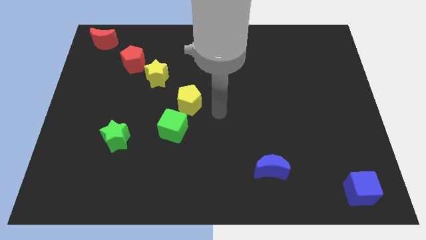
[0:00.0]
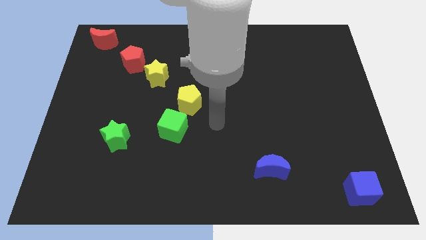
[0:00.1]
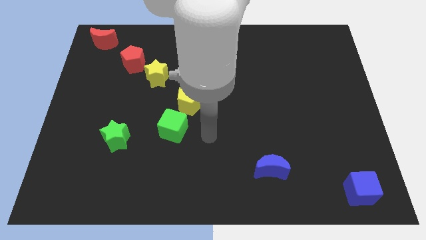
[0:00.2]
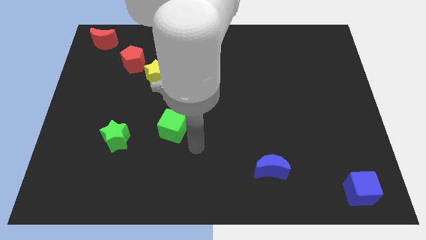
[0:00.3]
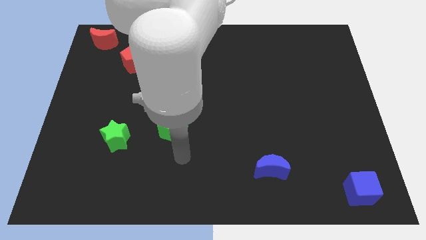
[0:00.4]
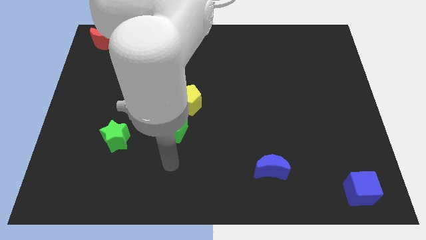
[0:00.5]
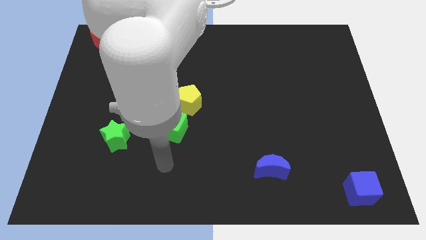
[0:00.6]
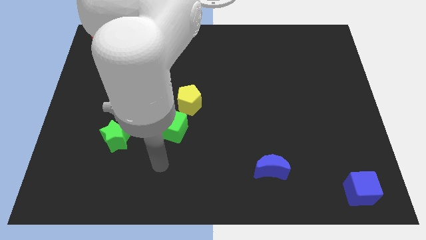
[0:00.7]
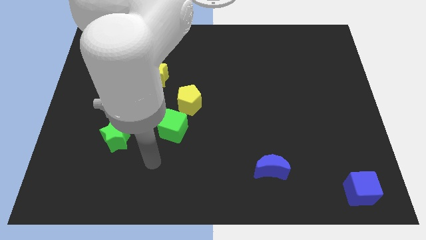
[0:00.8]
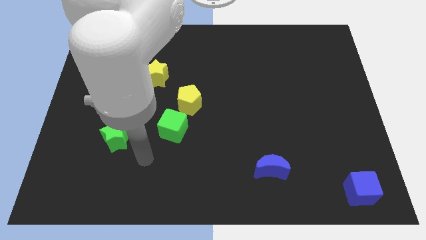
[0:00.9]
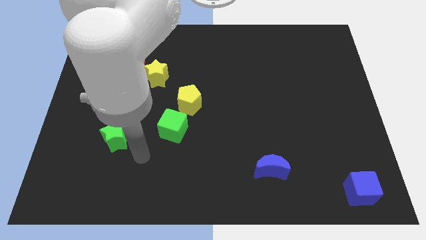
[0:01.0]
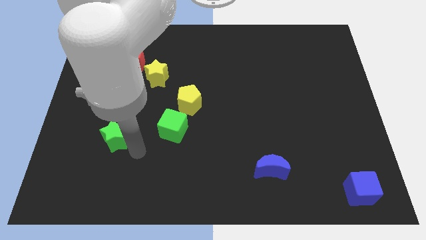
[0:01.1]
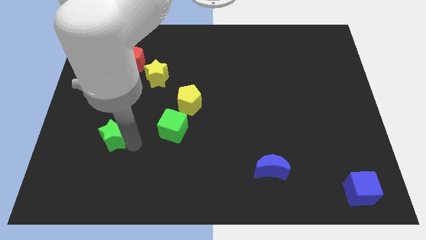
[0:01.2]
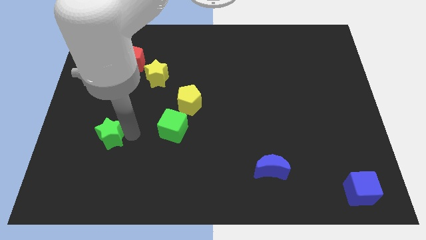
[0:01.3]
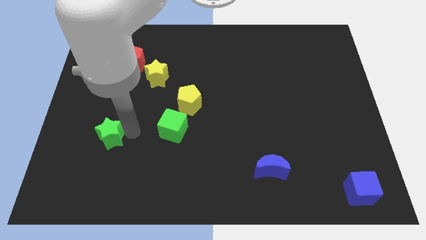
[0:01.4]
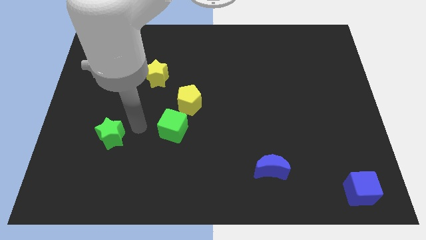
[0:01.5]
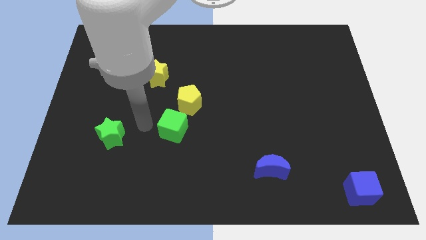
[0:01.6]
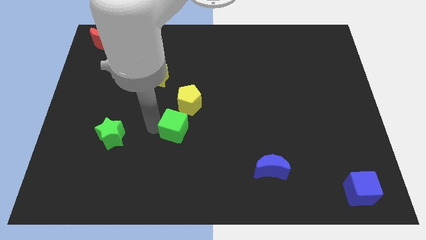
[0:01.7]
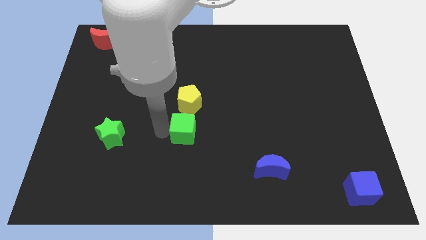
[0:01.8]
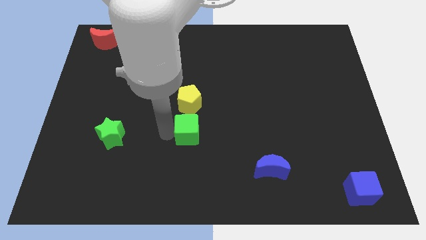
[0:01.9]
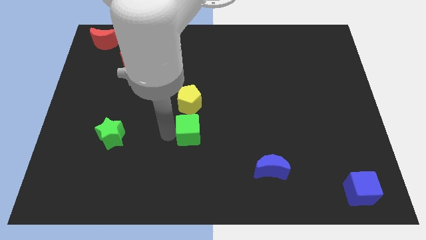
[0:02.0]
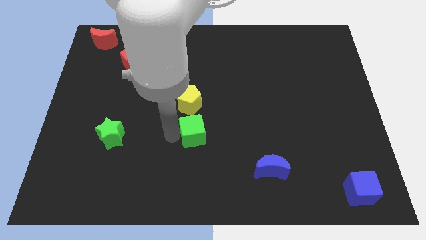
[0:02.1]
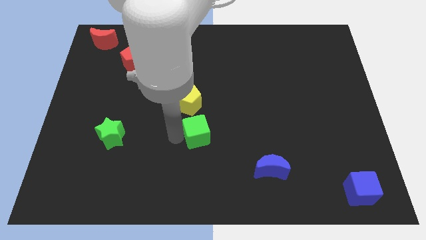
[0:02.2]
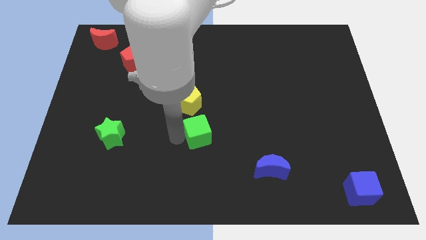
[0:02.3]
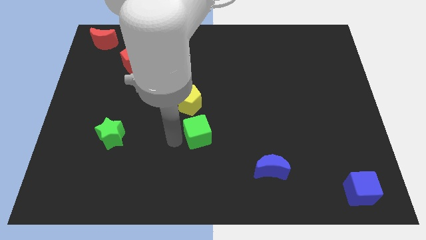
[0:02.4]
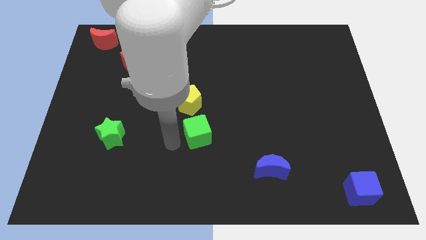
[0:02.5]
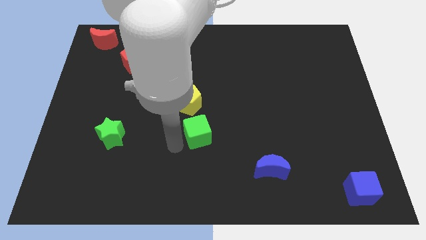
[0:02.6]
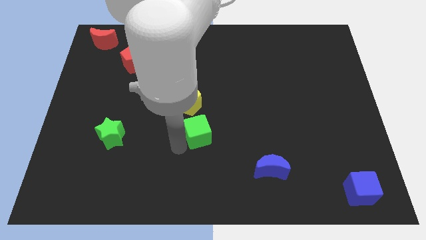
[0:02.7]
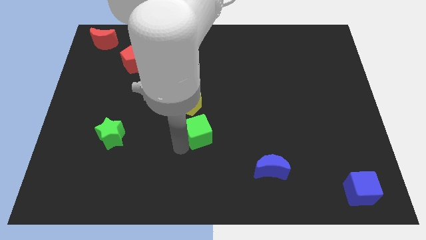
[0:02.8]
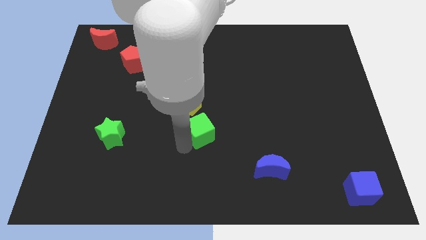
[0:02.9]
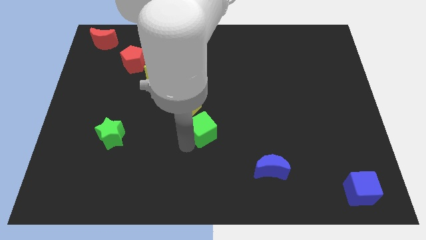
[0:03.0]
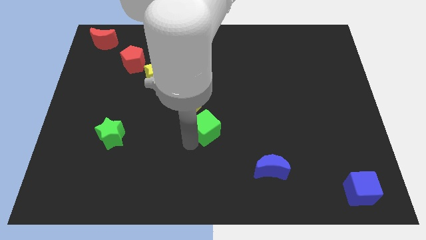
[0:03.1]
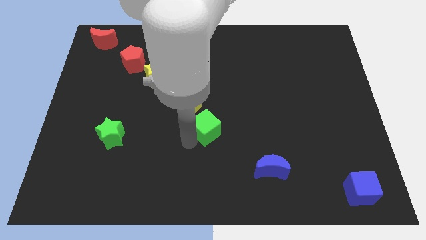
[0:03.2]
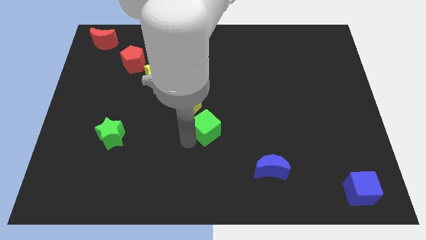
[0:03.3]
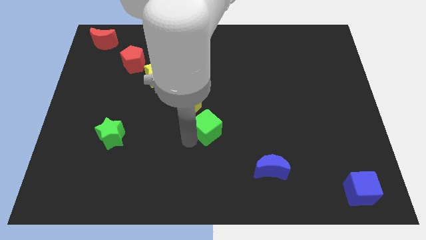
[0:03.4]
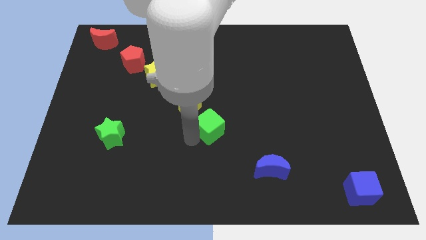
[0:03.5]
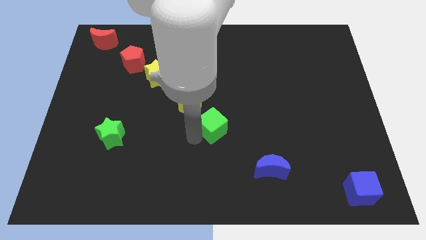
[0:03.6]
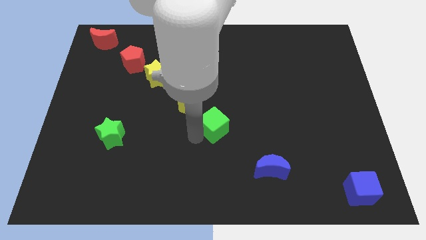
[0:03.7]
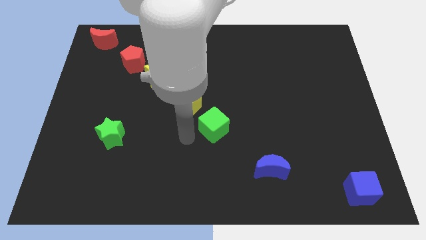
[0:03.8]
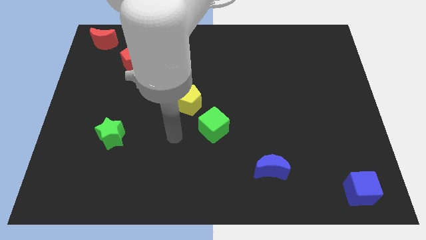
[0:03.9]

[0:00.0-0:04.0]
push the green cube to the bottom right of the yellow pentagon

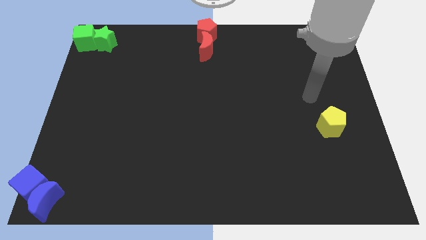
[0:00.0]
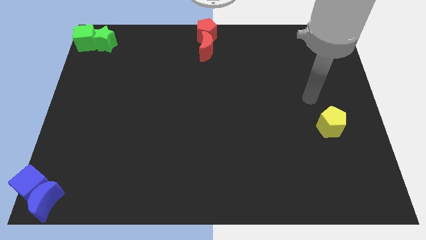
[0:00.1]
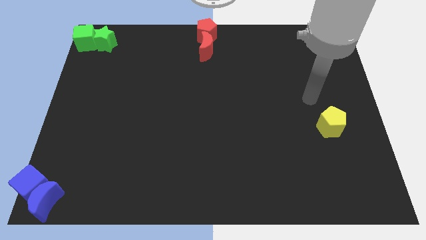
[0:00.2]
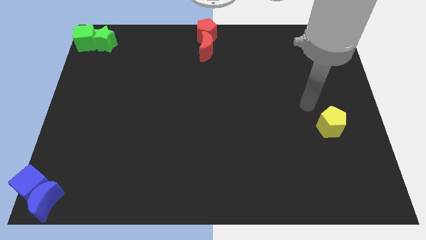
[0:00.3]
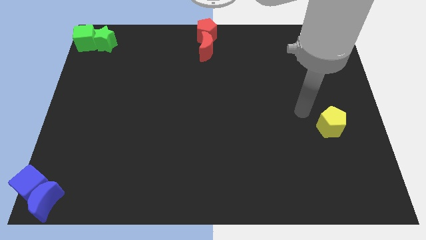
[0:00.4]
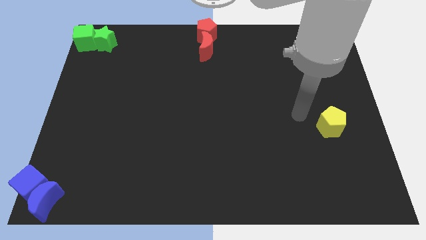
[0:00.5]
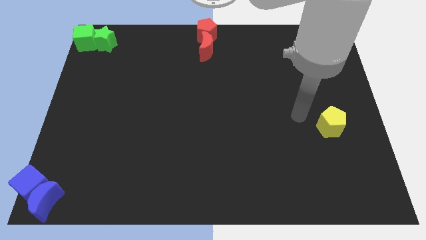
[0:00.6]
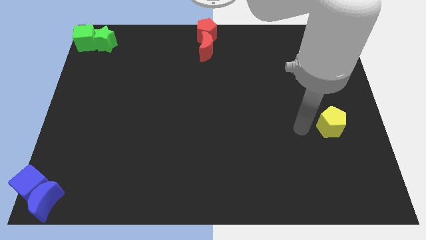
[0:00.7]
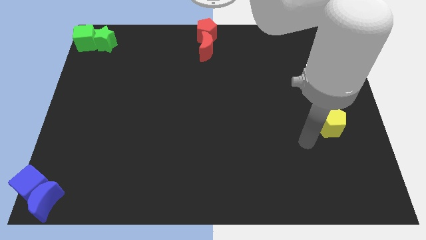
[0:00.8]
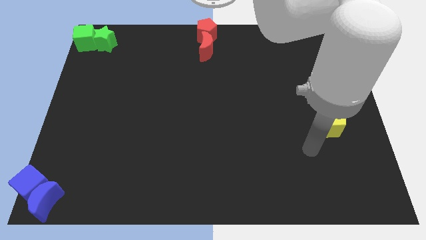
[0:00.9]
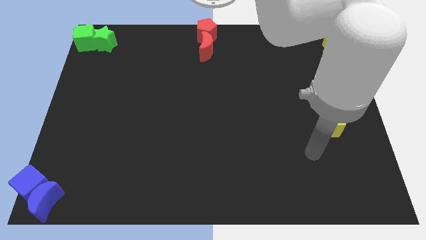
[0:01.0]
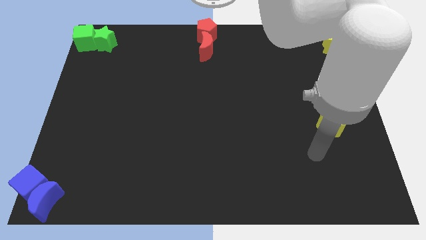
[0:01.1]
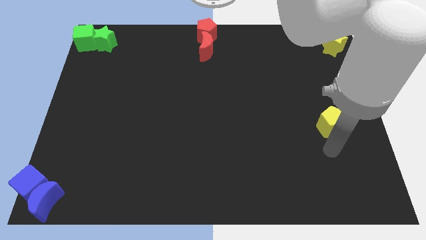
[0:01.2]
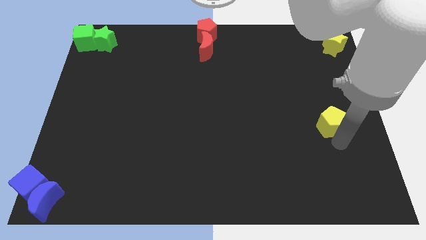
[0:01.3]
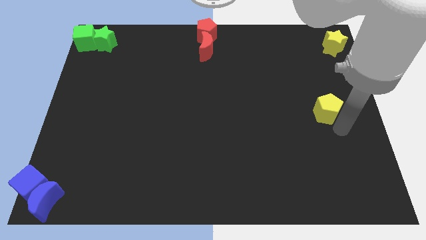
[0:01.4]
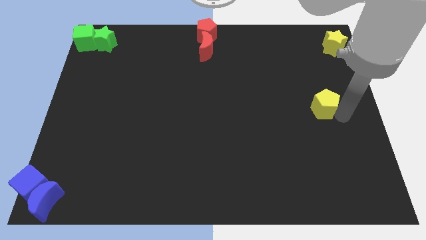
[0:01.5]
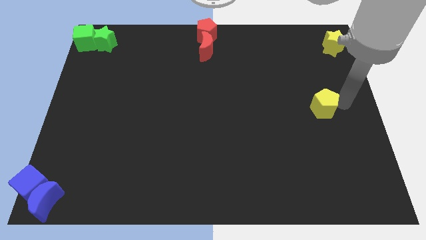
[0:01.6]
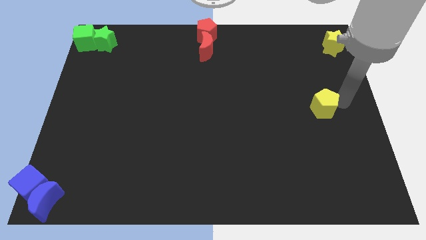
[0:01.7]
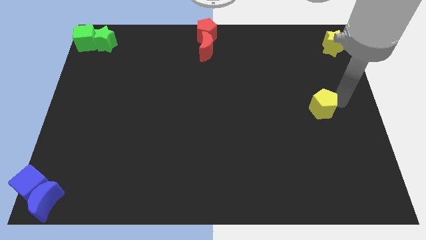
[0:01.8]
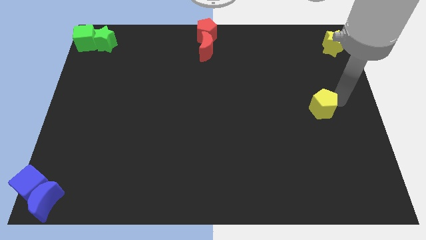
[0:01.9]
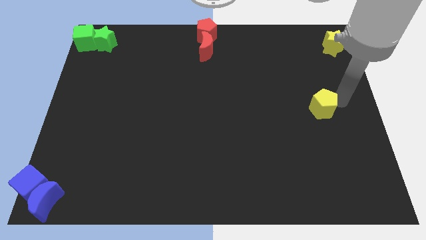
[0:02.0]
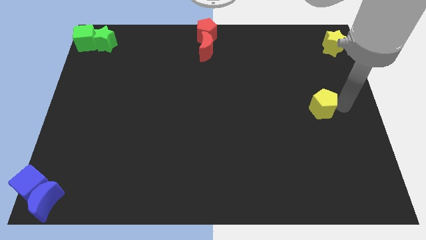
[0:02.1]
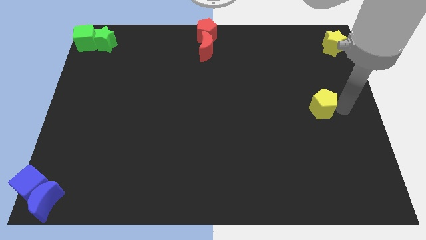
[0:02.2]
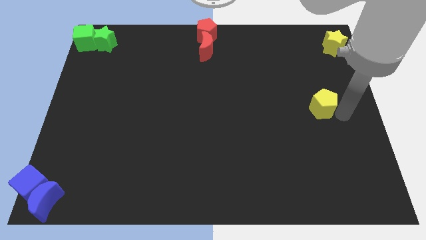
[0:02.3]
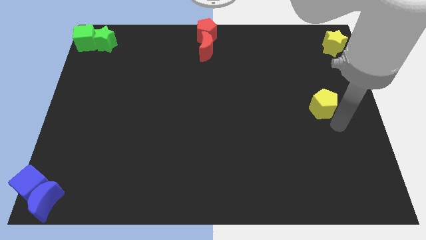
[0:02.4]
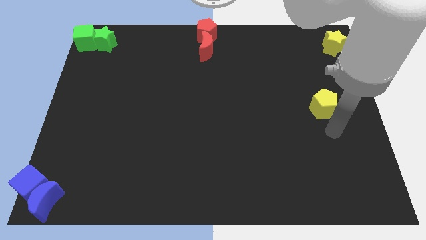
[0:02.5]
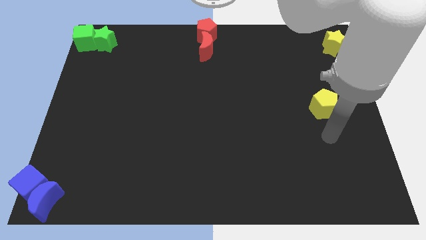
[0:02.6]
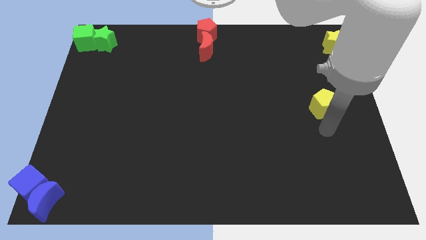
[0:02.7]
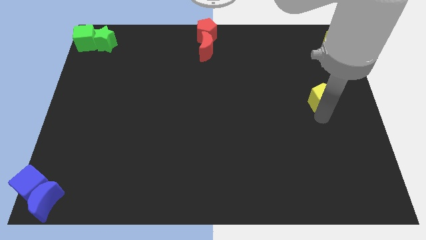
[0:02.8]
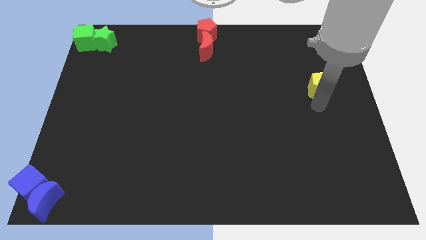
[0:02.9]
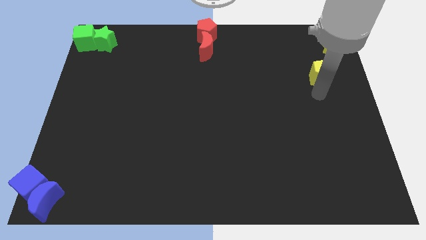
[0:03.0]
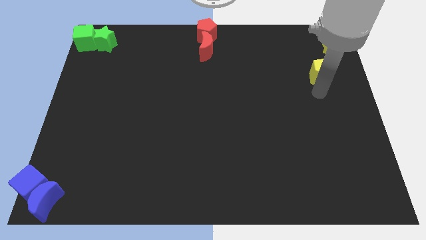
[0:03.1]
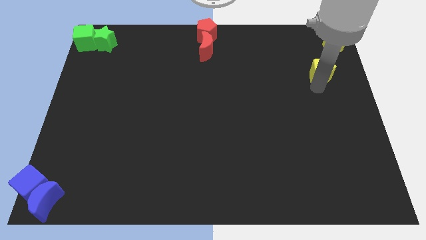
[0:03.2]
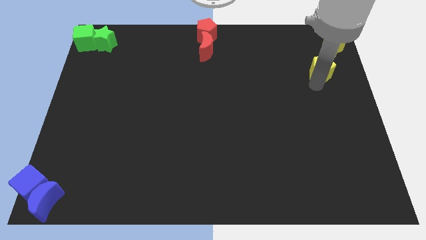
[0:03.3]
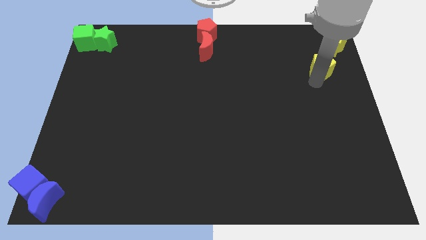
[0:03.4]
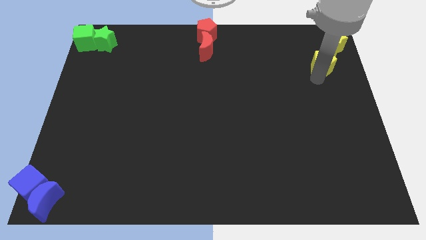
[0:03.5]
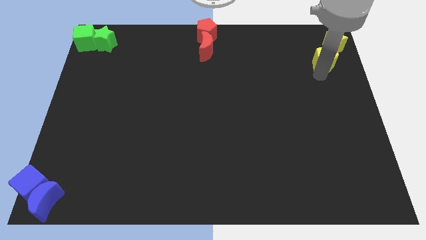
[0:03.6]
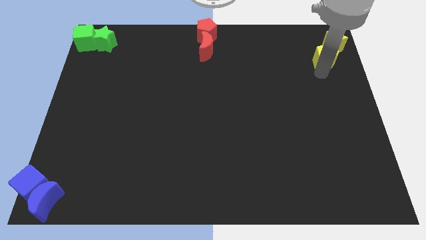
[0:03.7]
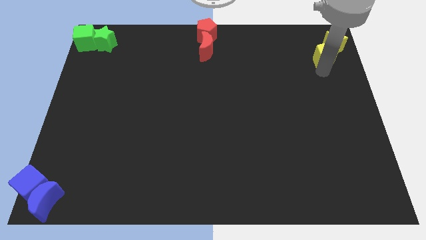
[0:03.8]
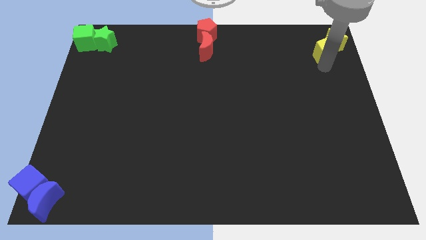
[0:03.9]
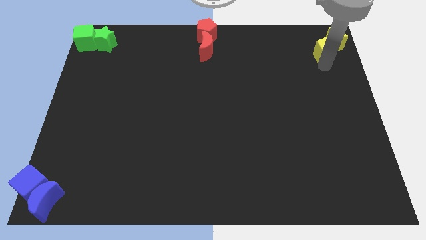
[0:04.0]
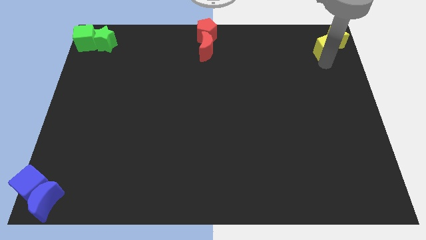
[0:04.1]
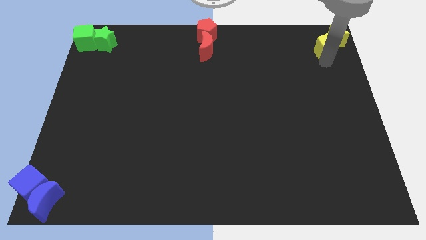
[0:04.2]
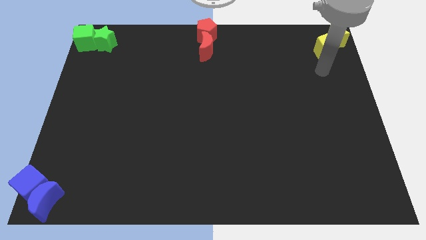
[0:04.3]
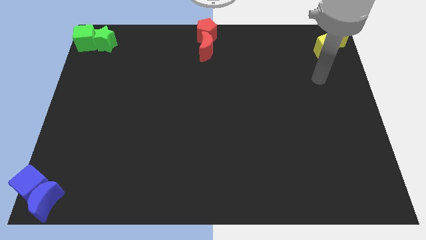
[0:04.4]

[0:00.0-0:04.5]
push the yellow pentagon into the yellow star

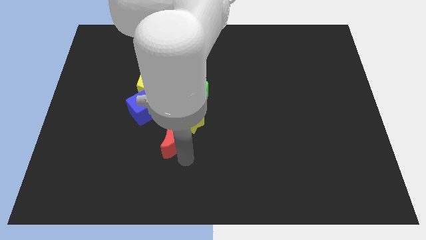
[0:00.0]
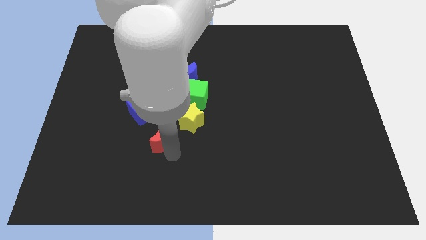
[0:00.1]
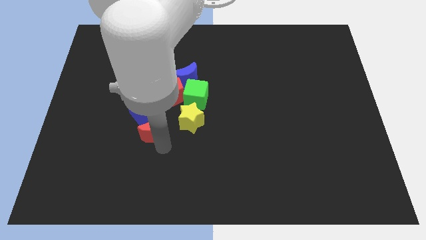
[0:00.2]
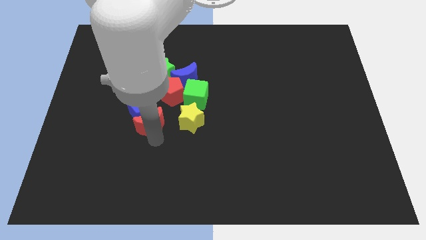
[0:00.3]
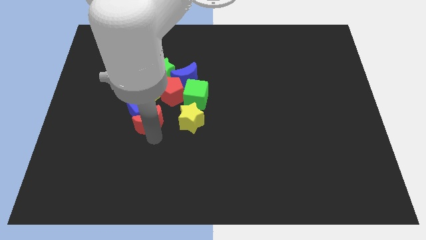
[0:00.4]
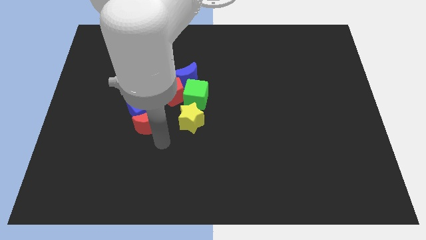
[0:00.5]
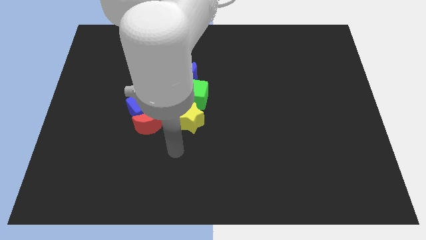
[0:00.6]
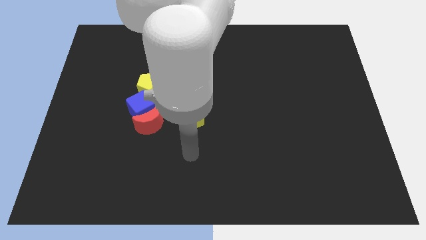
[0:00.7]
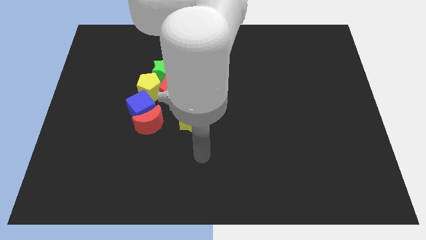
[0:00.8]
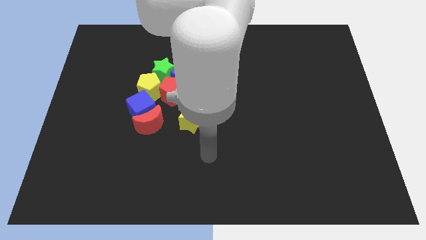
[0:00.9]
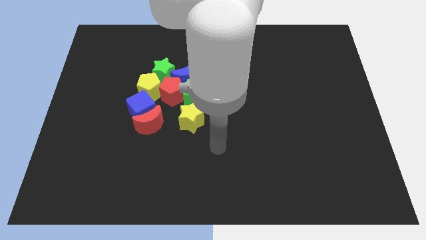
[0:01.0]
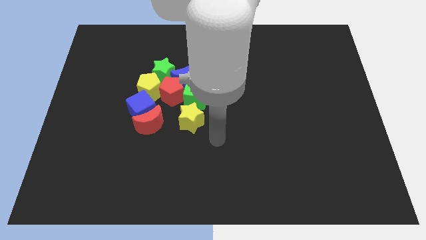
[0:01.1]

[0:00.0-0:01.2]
move the red crescent into the blue block
